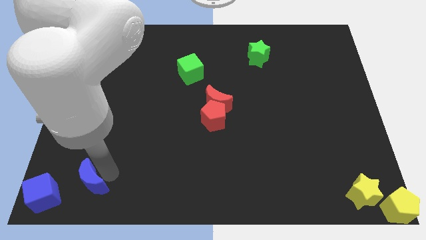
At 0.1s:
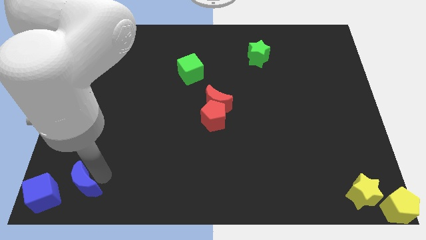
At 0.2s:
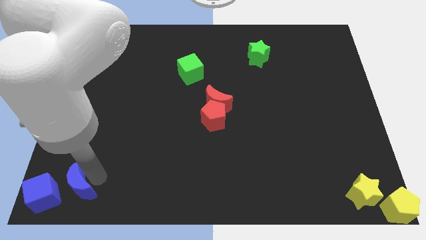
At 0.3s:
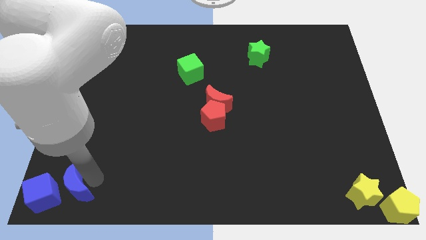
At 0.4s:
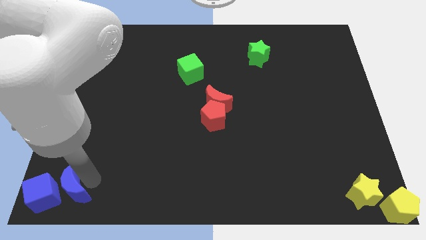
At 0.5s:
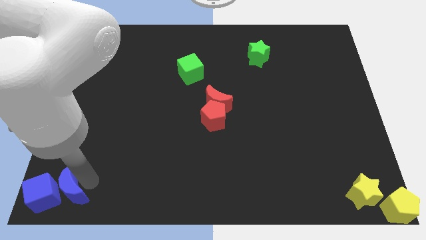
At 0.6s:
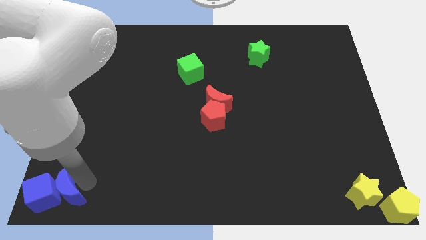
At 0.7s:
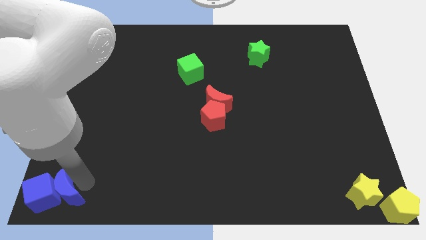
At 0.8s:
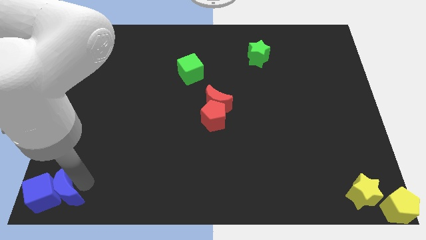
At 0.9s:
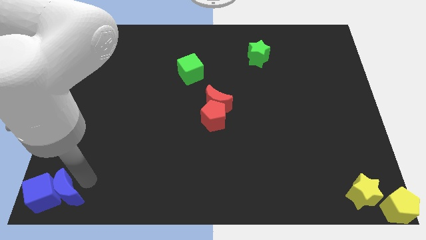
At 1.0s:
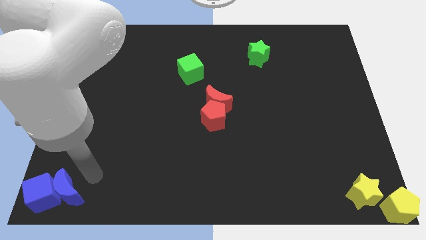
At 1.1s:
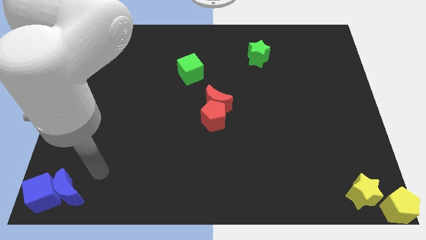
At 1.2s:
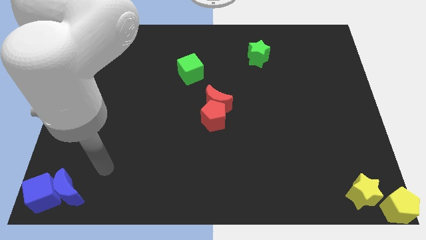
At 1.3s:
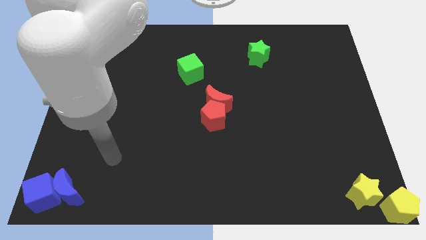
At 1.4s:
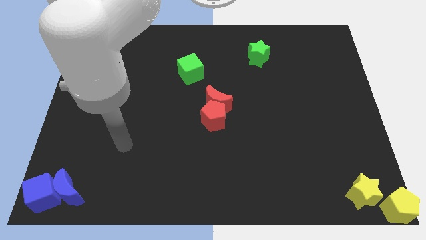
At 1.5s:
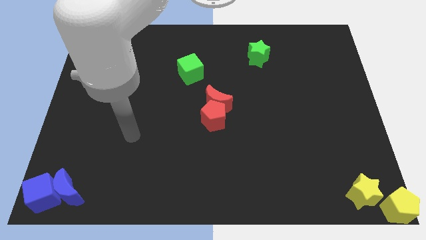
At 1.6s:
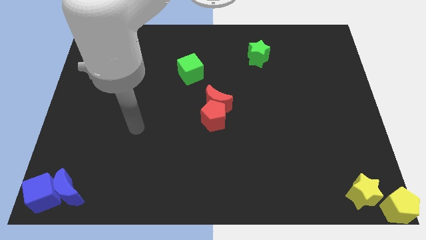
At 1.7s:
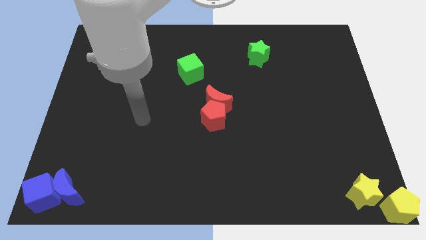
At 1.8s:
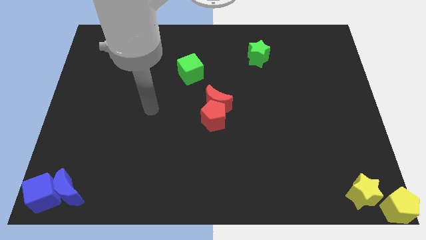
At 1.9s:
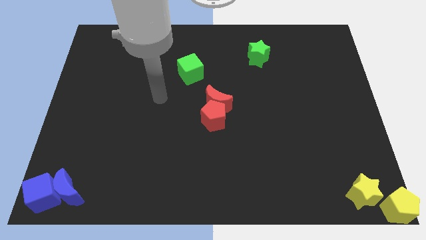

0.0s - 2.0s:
move the blue crescent to the right side of the blue cube

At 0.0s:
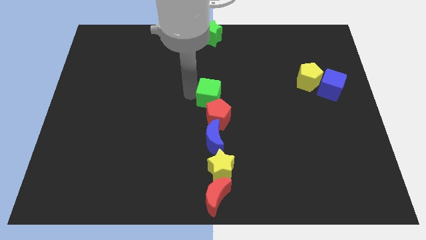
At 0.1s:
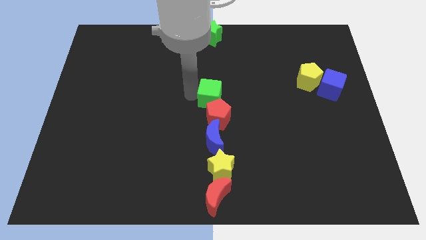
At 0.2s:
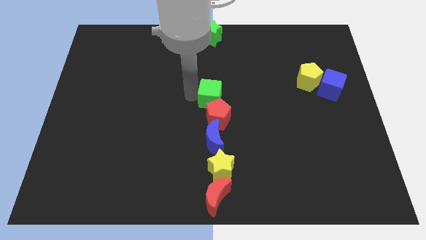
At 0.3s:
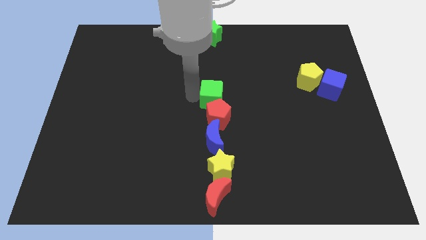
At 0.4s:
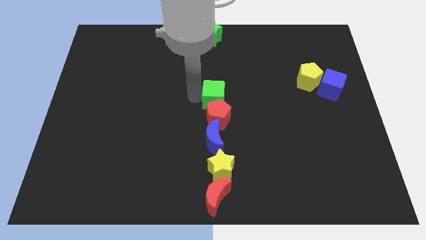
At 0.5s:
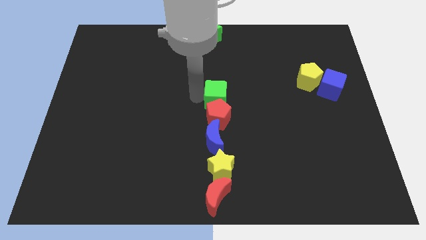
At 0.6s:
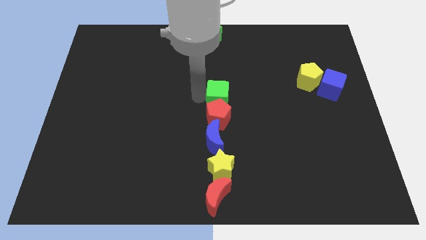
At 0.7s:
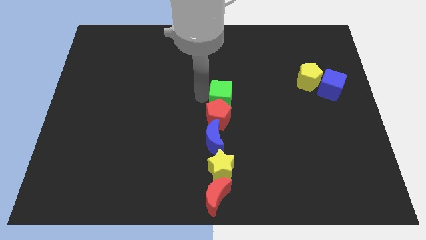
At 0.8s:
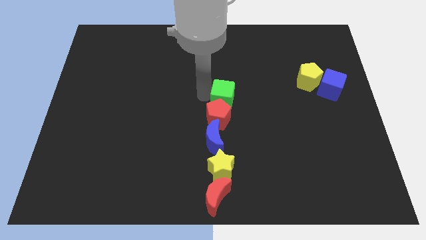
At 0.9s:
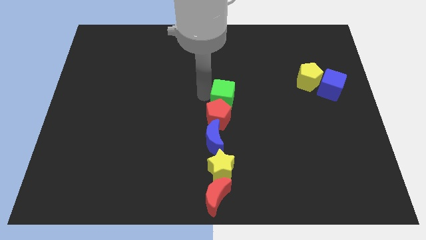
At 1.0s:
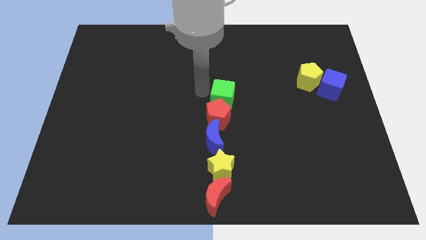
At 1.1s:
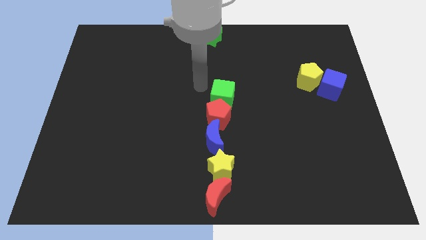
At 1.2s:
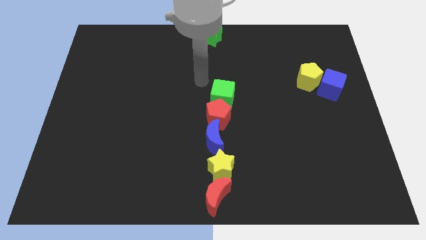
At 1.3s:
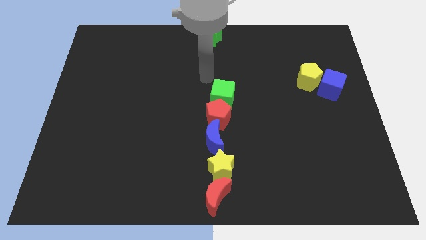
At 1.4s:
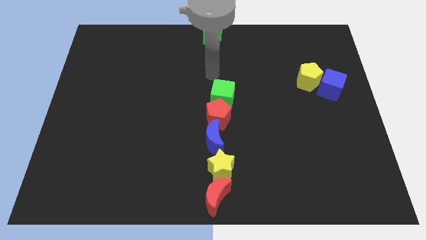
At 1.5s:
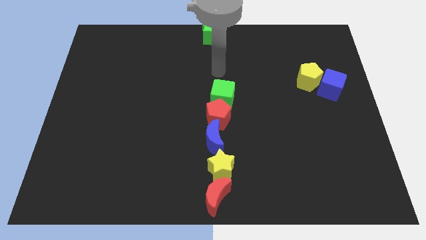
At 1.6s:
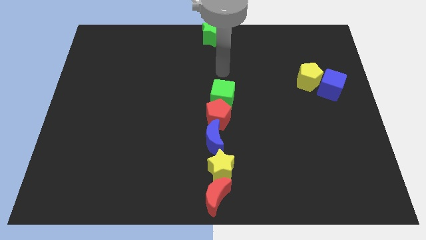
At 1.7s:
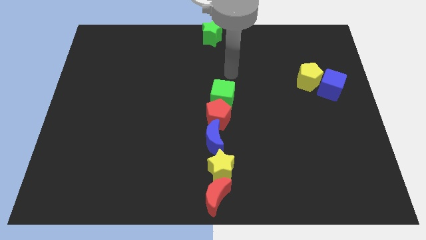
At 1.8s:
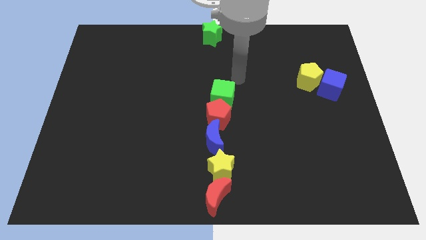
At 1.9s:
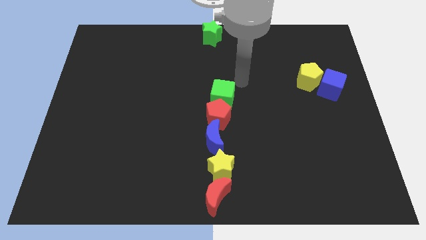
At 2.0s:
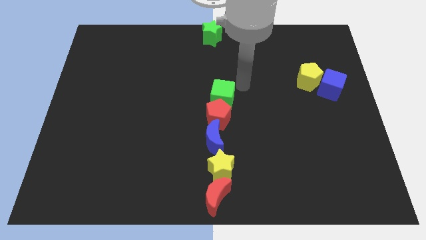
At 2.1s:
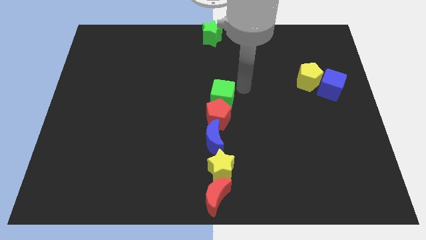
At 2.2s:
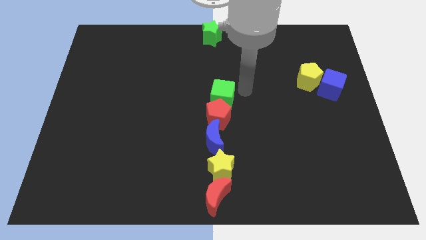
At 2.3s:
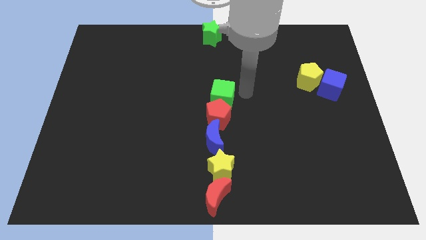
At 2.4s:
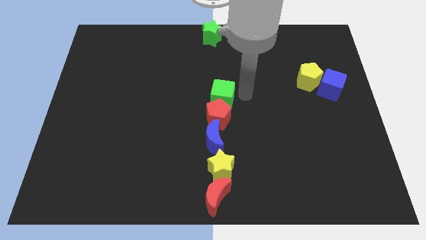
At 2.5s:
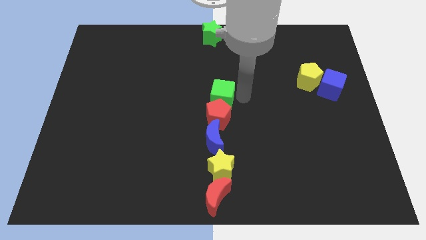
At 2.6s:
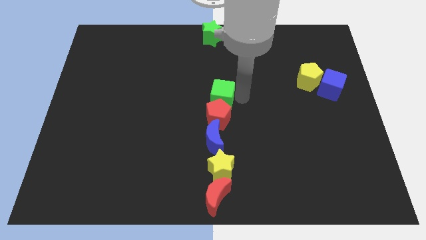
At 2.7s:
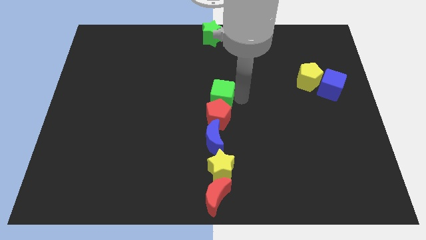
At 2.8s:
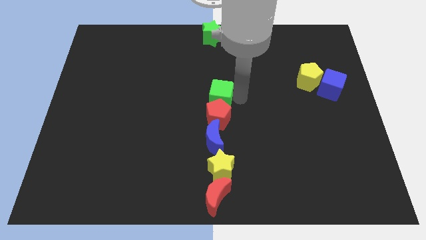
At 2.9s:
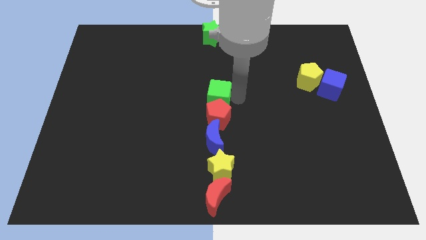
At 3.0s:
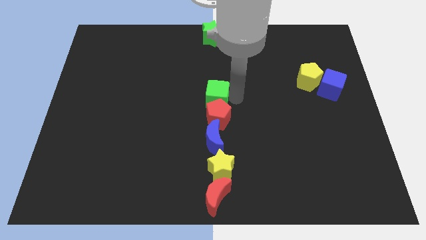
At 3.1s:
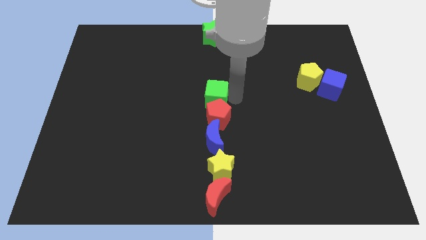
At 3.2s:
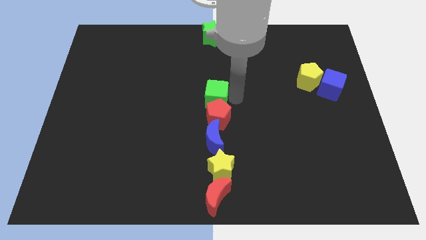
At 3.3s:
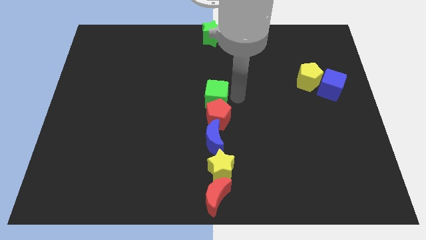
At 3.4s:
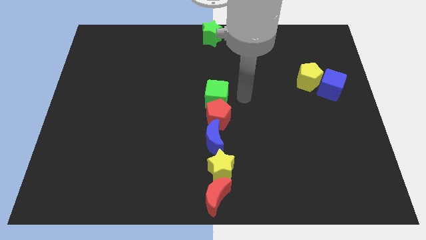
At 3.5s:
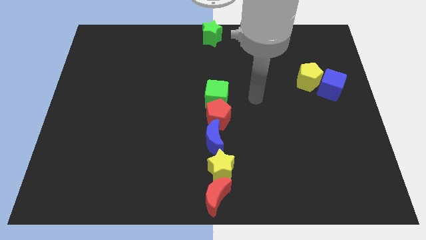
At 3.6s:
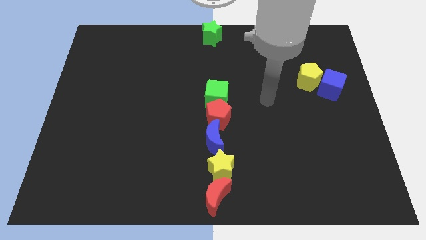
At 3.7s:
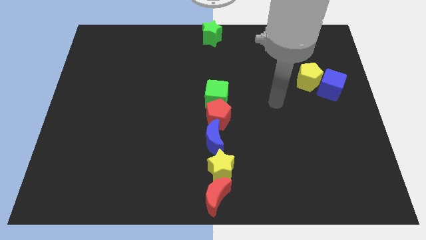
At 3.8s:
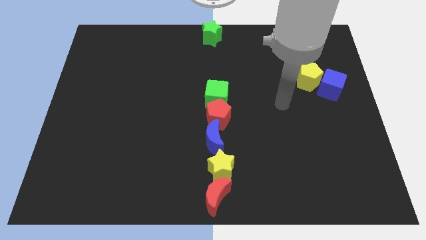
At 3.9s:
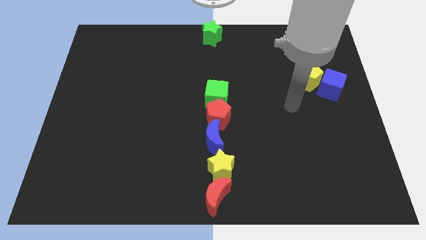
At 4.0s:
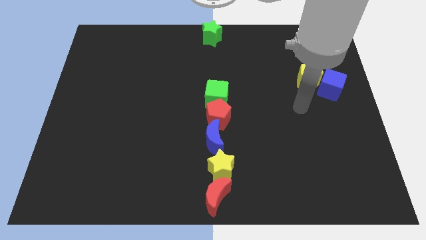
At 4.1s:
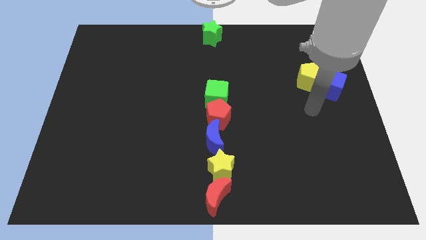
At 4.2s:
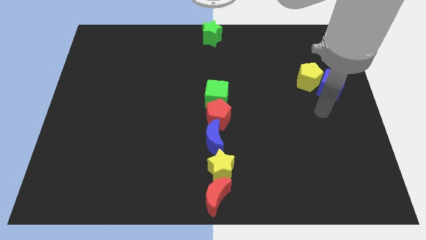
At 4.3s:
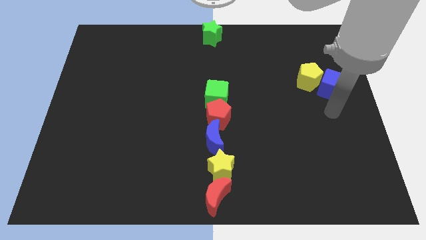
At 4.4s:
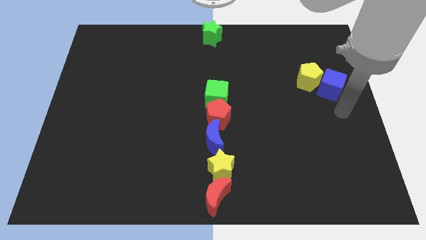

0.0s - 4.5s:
move your arm away from green cube

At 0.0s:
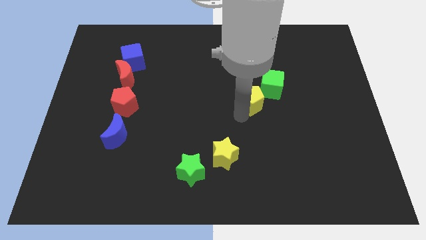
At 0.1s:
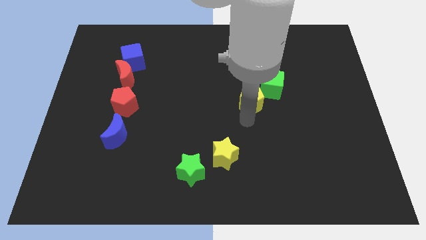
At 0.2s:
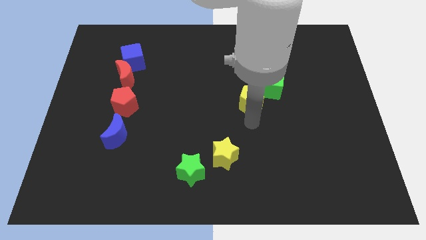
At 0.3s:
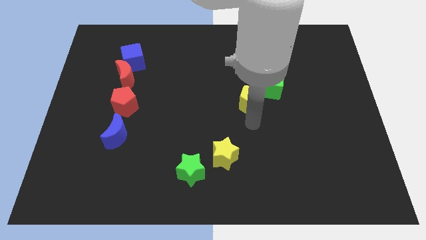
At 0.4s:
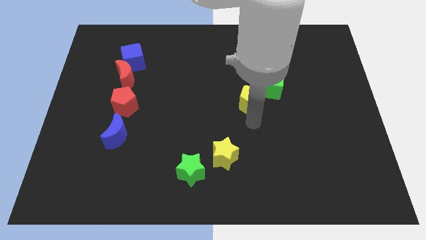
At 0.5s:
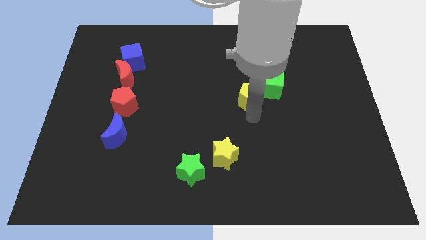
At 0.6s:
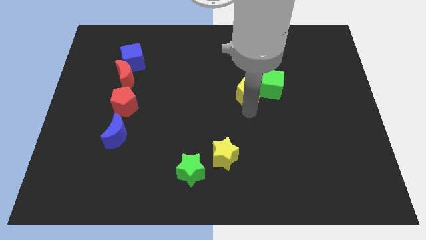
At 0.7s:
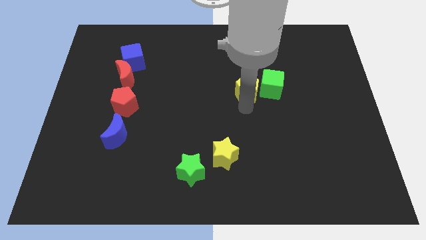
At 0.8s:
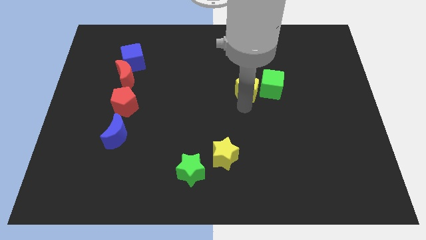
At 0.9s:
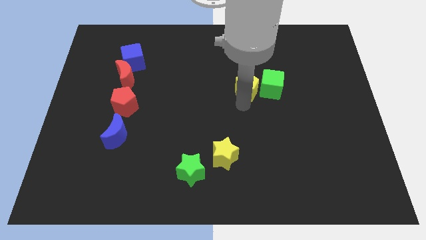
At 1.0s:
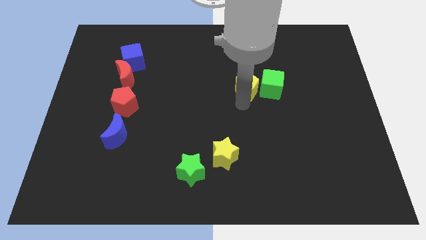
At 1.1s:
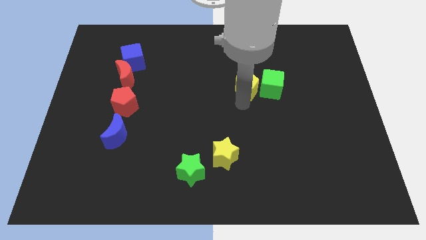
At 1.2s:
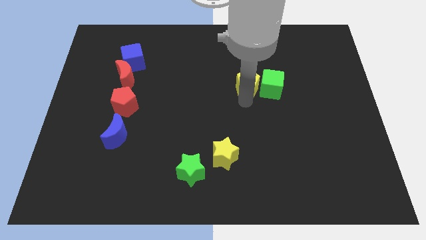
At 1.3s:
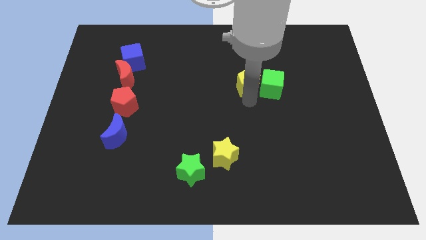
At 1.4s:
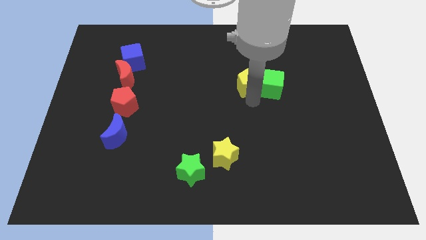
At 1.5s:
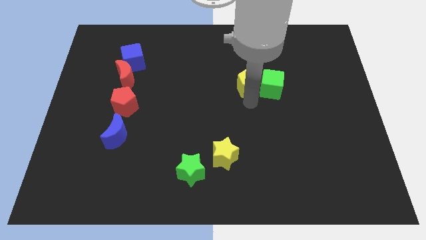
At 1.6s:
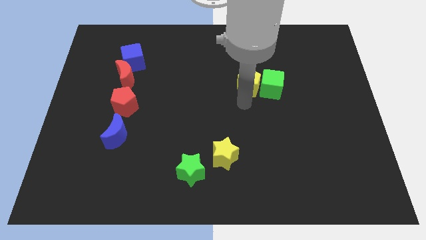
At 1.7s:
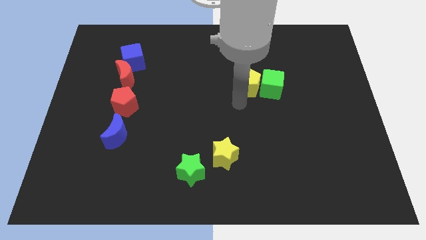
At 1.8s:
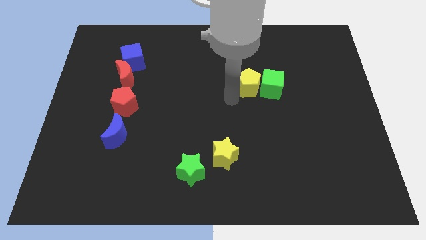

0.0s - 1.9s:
push yellow pentagon to the left of green cube

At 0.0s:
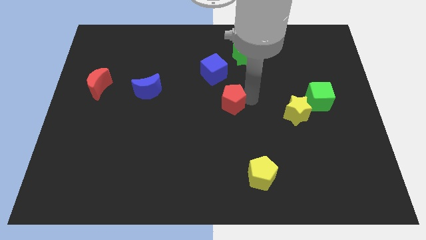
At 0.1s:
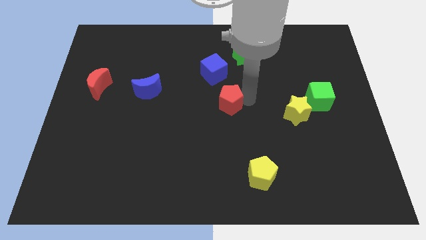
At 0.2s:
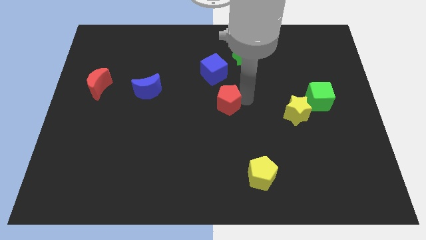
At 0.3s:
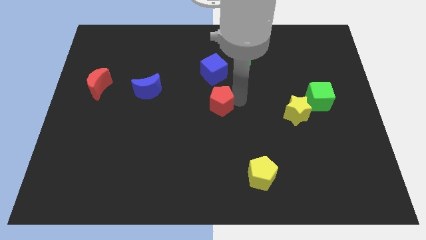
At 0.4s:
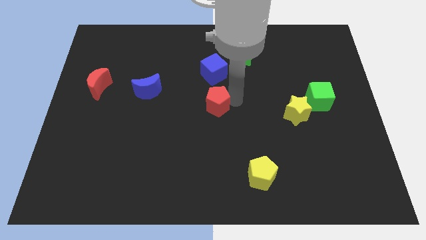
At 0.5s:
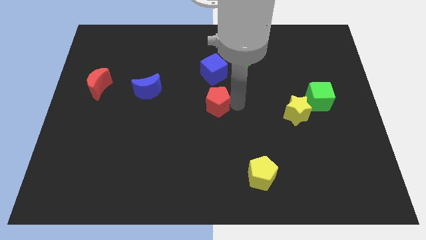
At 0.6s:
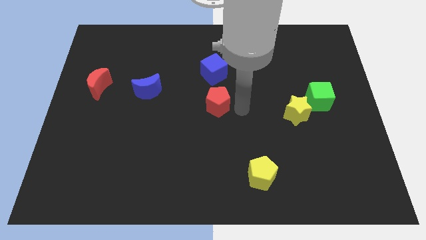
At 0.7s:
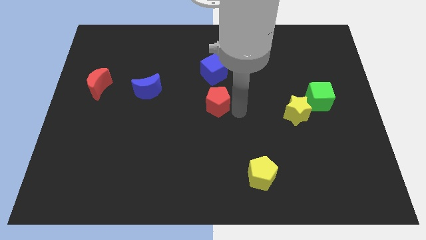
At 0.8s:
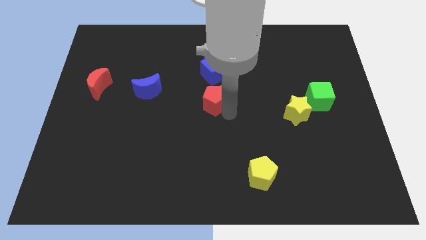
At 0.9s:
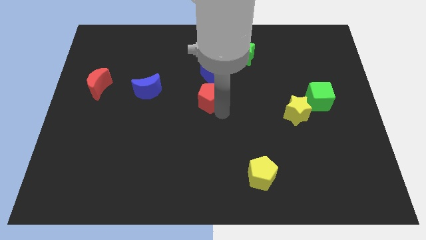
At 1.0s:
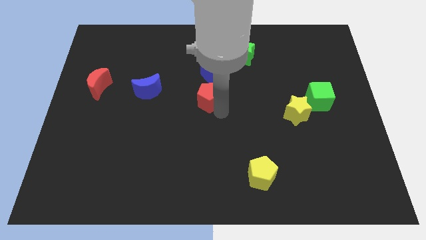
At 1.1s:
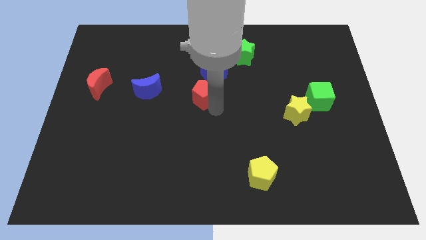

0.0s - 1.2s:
move red pentagon to the center
